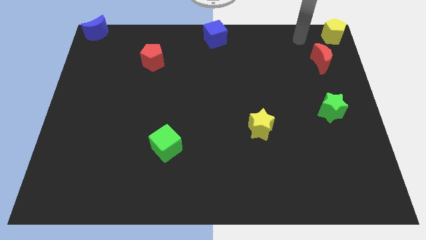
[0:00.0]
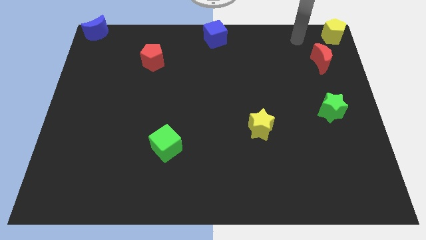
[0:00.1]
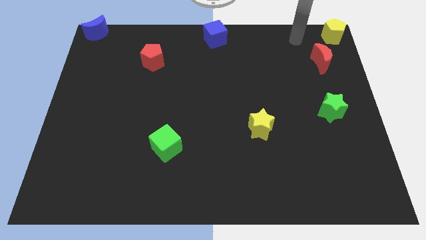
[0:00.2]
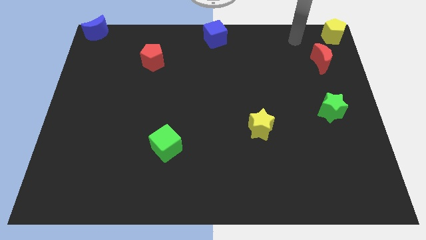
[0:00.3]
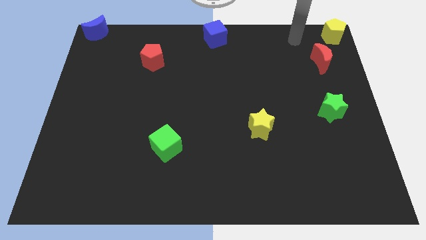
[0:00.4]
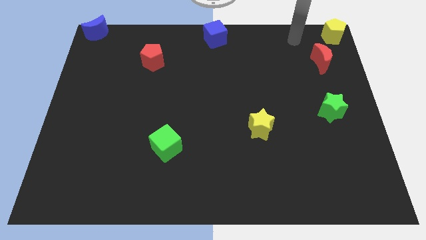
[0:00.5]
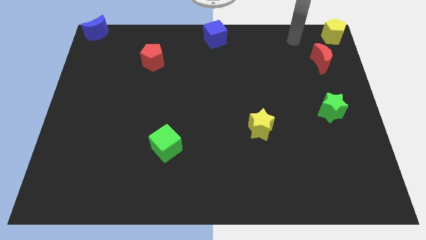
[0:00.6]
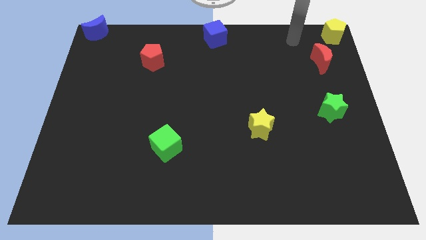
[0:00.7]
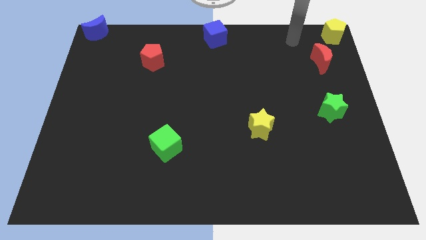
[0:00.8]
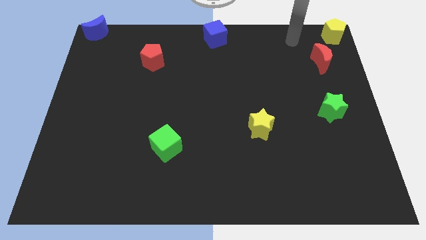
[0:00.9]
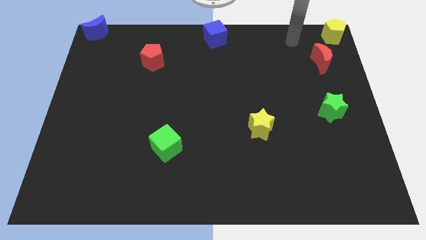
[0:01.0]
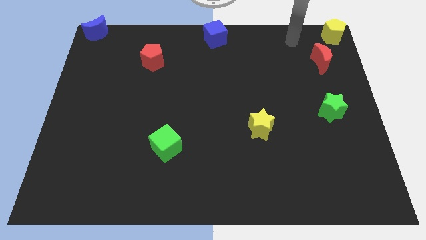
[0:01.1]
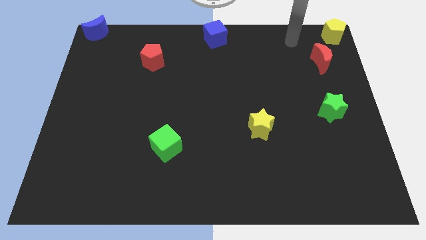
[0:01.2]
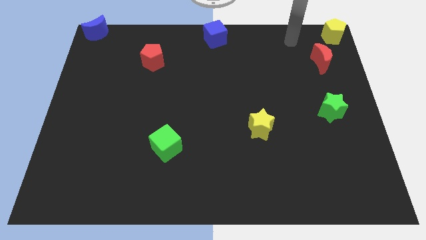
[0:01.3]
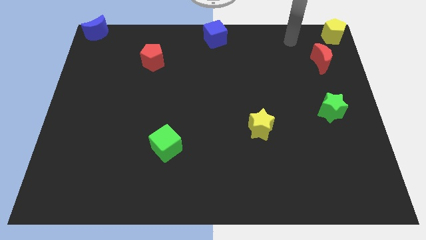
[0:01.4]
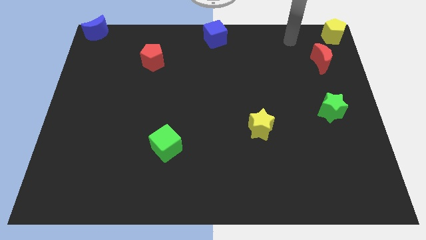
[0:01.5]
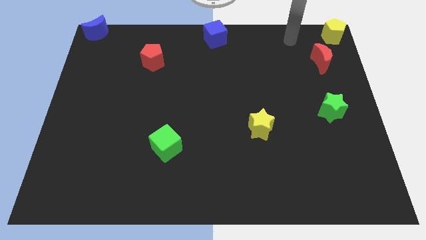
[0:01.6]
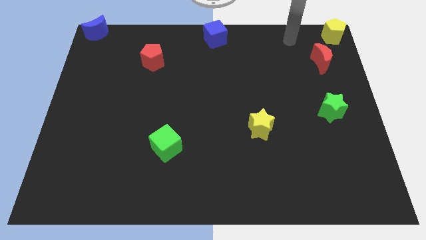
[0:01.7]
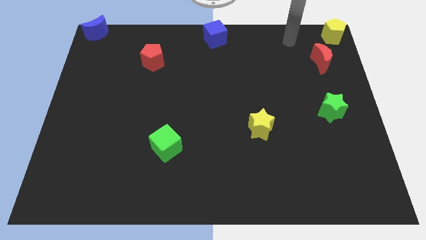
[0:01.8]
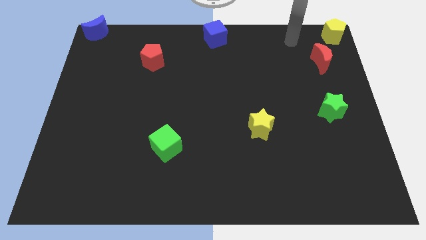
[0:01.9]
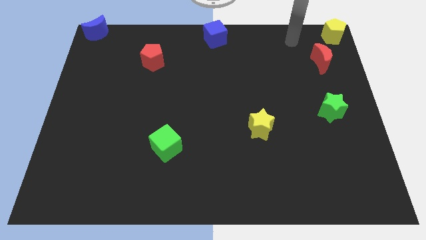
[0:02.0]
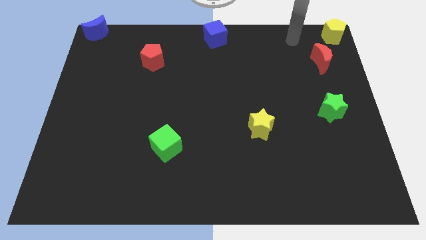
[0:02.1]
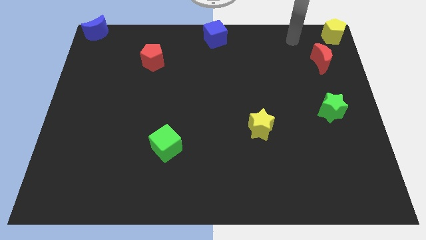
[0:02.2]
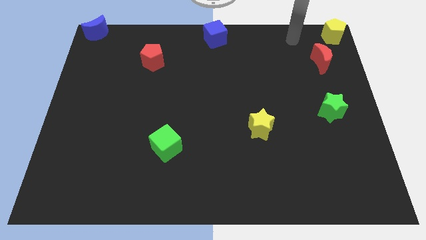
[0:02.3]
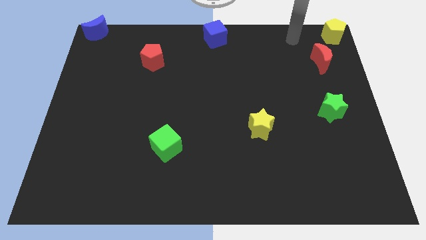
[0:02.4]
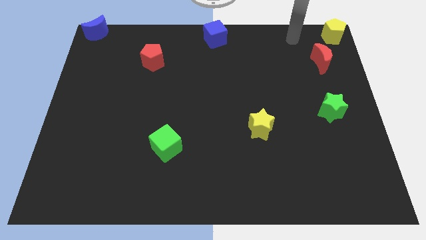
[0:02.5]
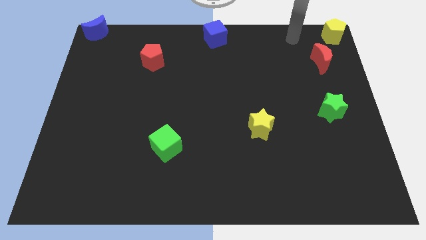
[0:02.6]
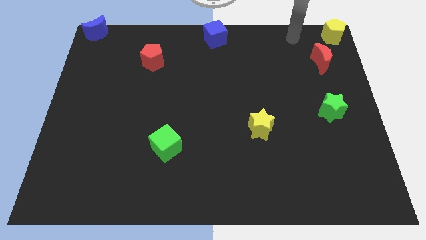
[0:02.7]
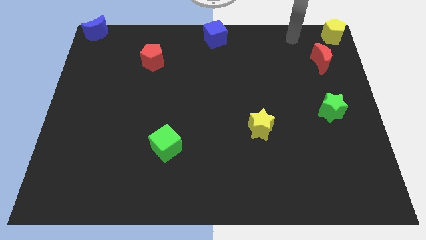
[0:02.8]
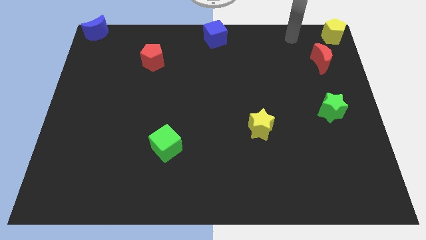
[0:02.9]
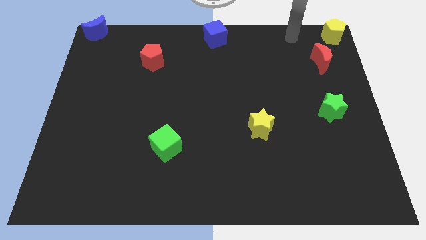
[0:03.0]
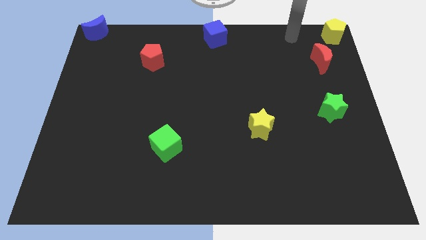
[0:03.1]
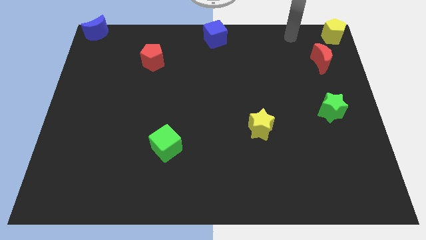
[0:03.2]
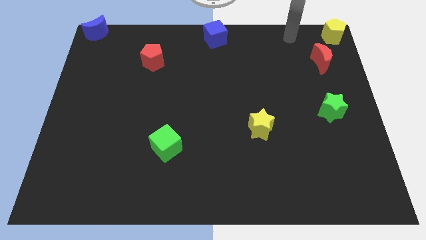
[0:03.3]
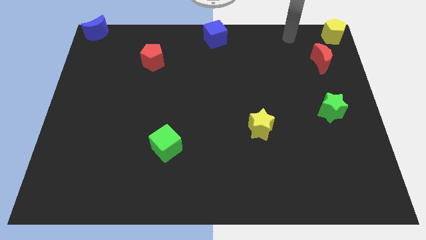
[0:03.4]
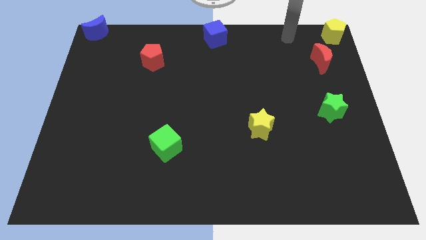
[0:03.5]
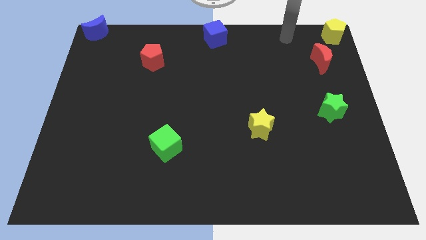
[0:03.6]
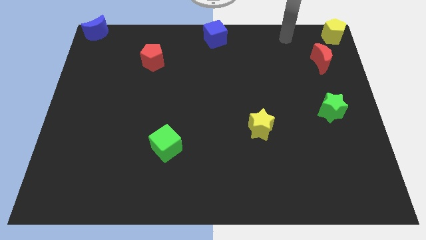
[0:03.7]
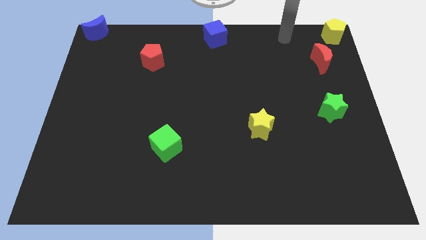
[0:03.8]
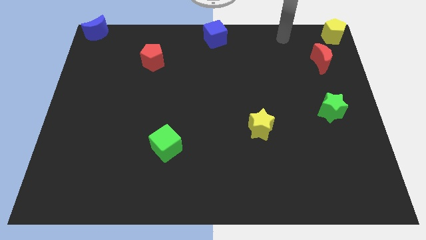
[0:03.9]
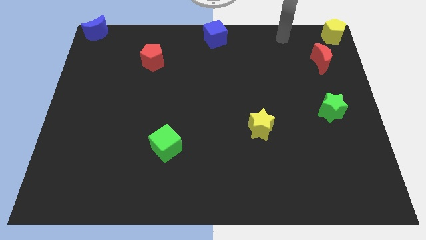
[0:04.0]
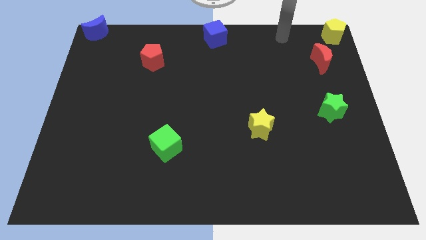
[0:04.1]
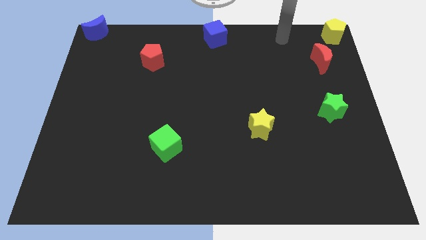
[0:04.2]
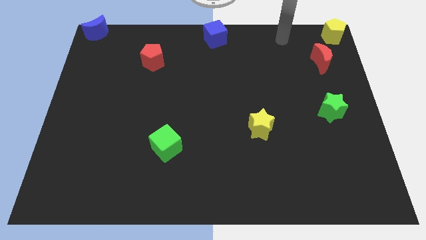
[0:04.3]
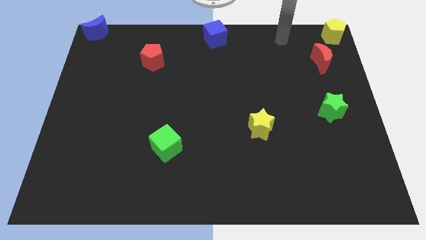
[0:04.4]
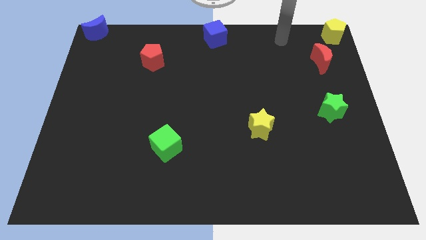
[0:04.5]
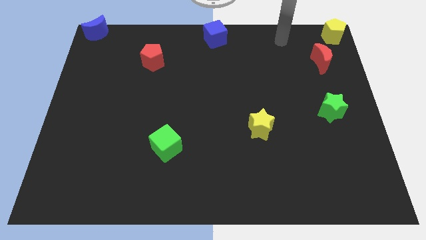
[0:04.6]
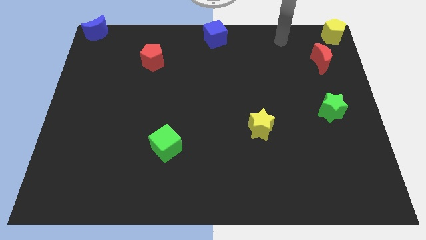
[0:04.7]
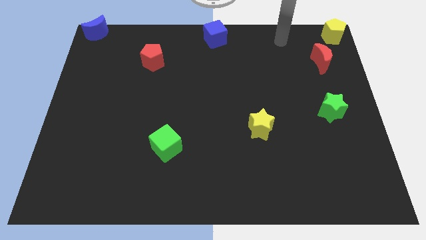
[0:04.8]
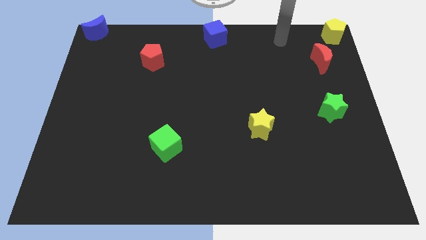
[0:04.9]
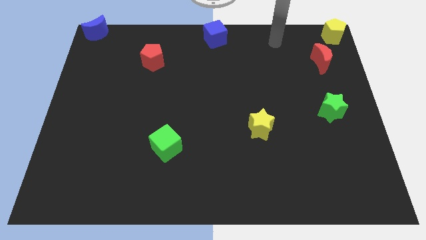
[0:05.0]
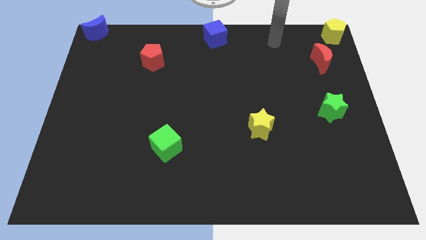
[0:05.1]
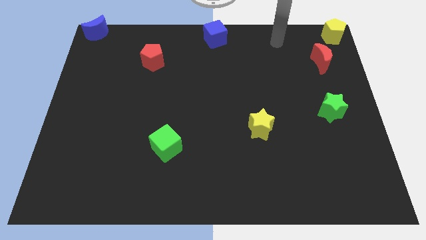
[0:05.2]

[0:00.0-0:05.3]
place the arm in between the yellow pentagon and blue cube

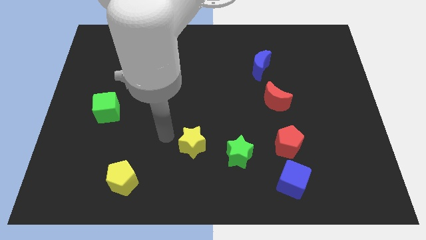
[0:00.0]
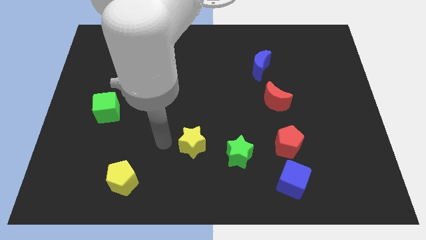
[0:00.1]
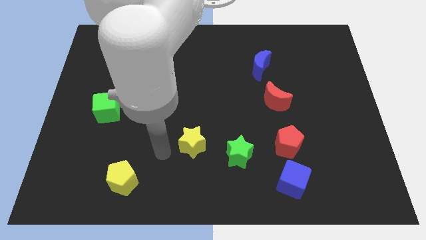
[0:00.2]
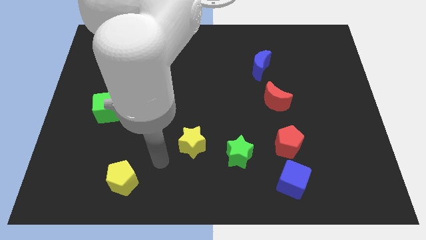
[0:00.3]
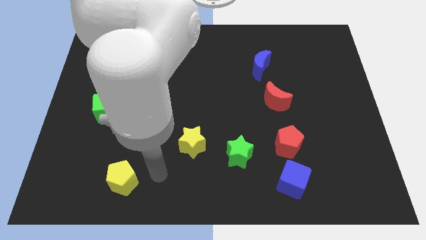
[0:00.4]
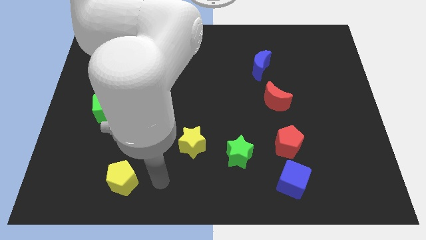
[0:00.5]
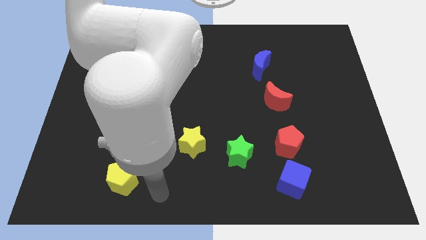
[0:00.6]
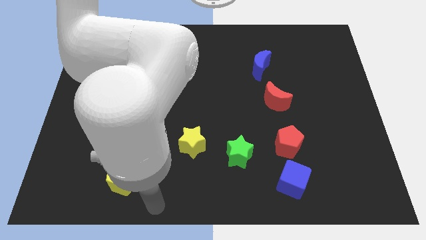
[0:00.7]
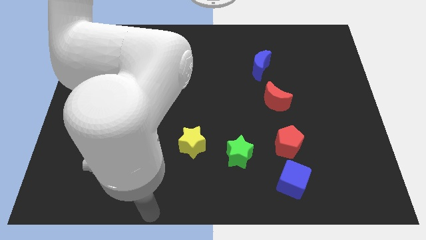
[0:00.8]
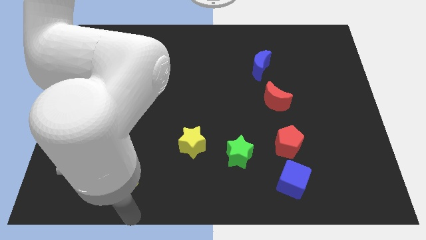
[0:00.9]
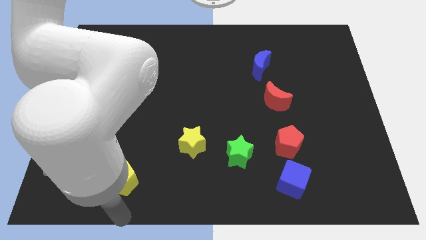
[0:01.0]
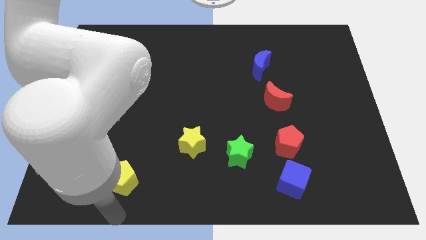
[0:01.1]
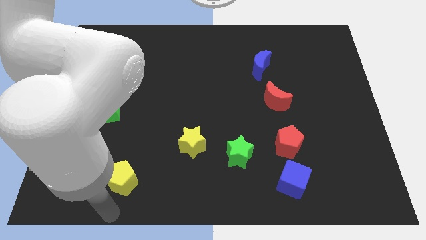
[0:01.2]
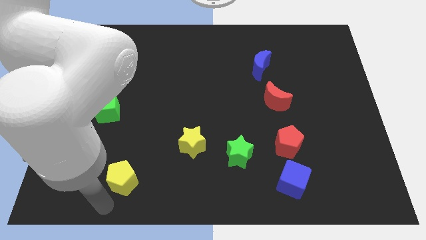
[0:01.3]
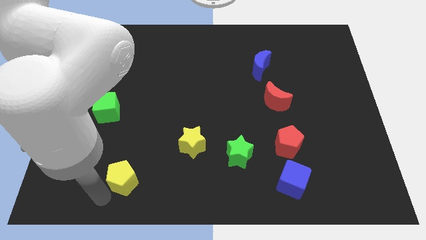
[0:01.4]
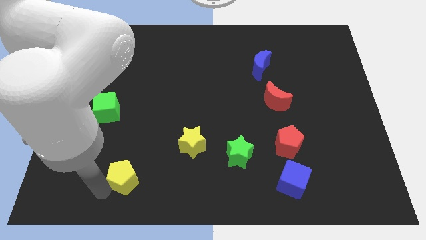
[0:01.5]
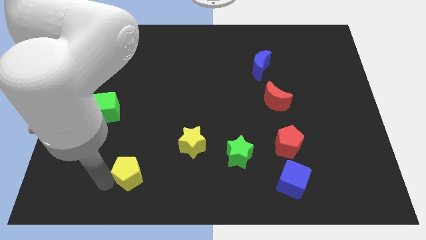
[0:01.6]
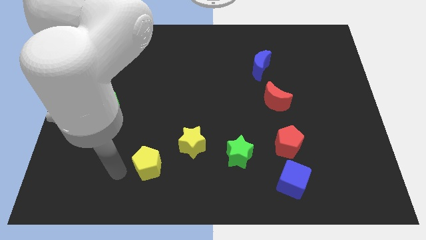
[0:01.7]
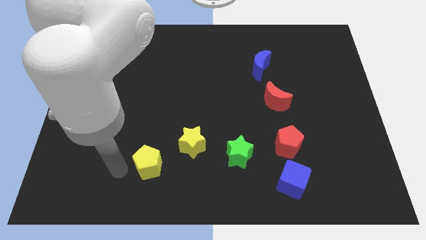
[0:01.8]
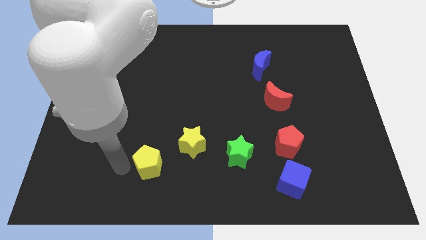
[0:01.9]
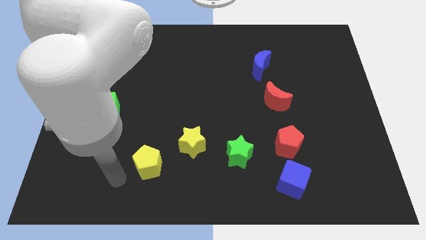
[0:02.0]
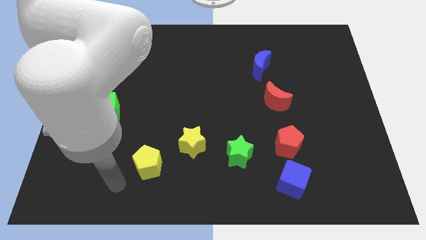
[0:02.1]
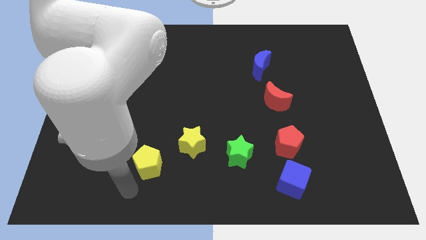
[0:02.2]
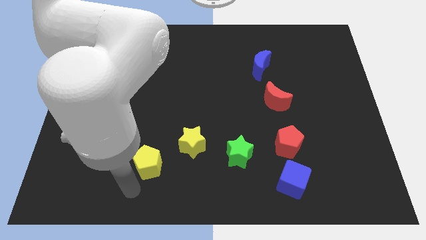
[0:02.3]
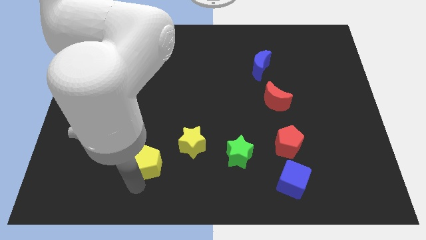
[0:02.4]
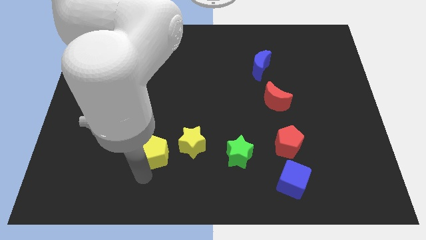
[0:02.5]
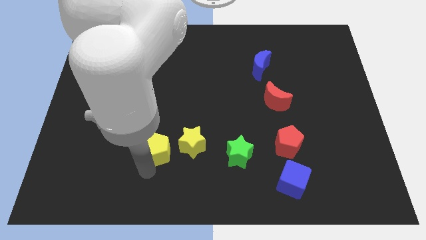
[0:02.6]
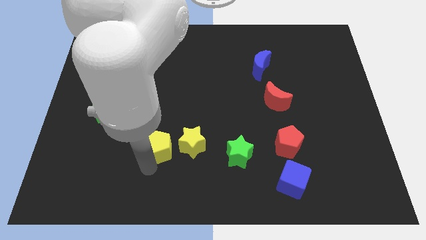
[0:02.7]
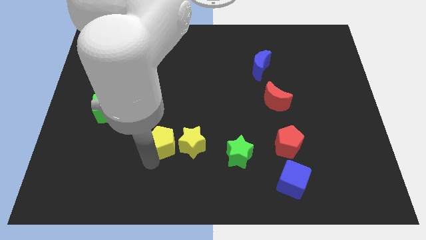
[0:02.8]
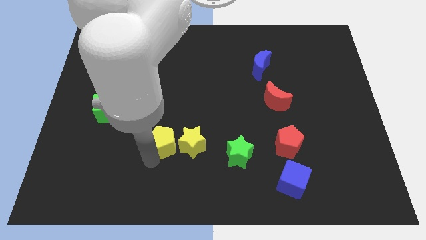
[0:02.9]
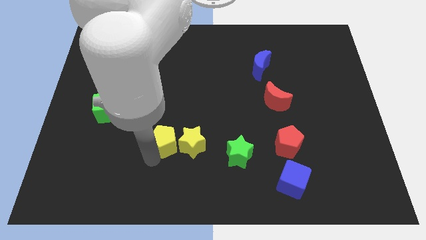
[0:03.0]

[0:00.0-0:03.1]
place yellow pentagon left to yellow star

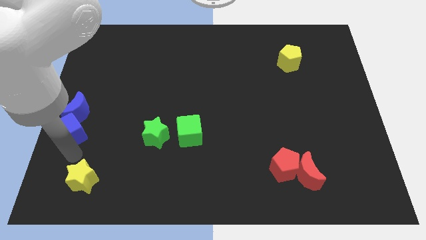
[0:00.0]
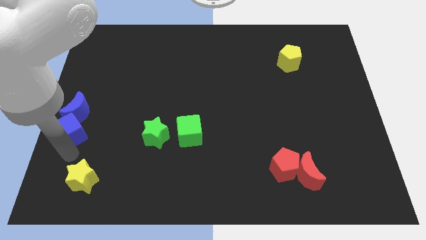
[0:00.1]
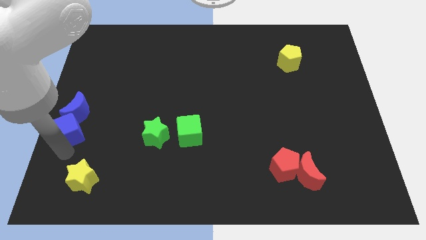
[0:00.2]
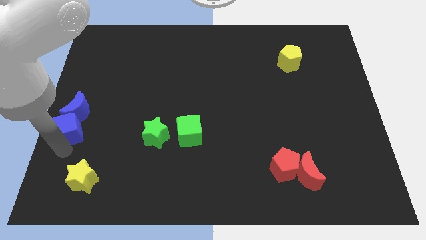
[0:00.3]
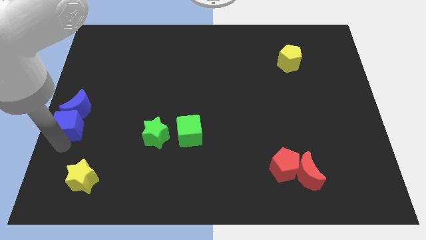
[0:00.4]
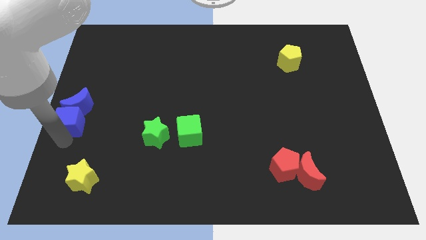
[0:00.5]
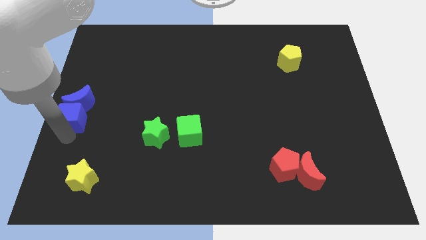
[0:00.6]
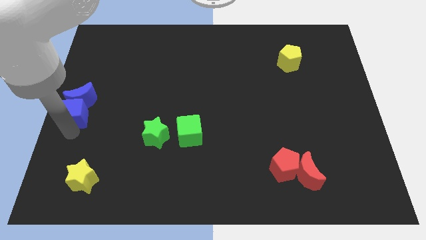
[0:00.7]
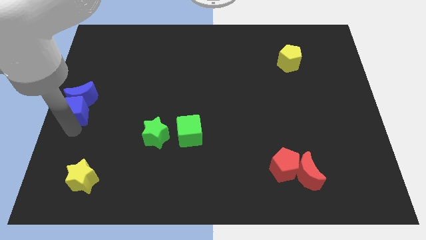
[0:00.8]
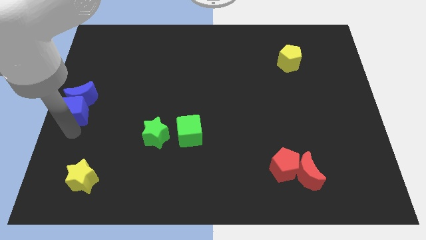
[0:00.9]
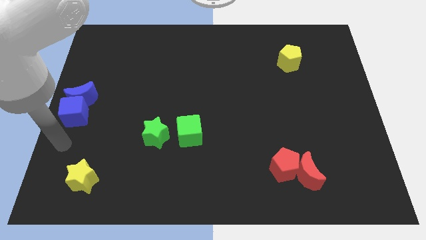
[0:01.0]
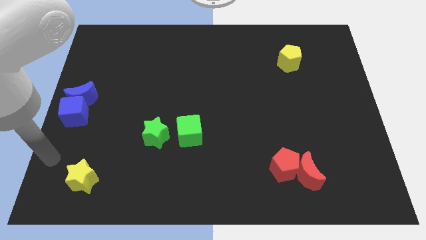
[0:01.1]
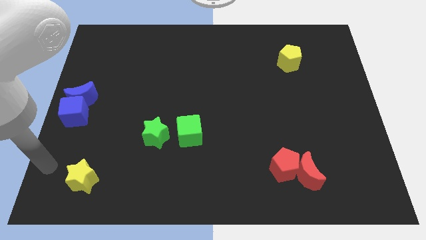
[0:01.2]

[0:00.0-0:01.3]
push the blue cube slightly upwards
